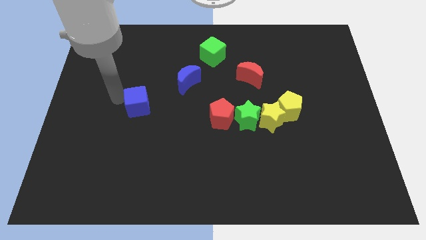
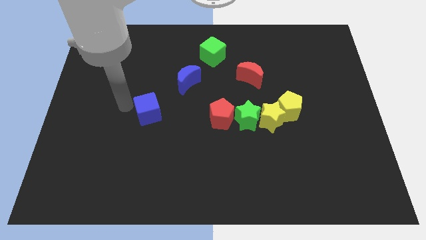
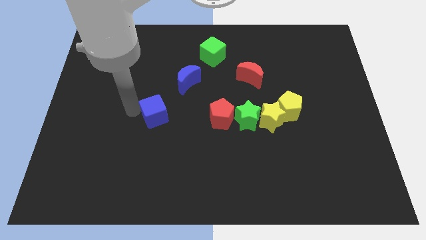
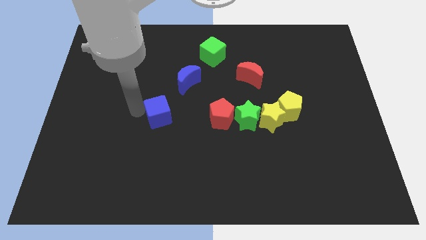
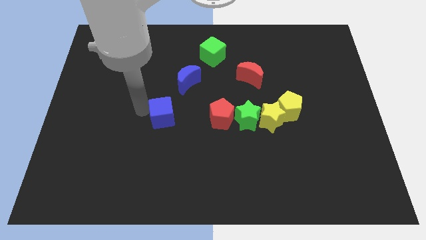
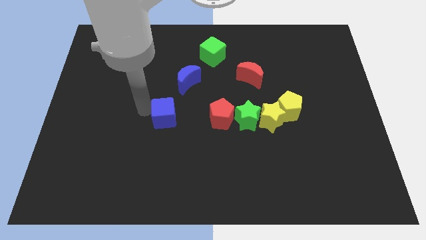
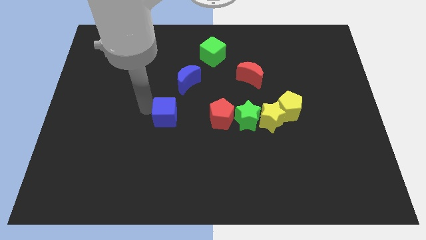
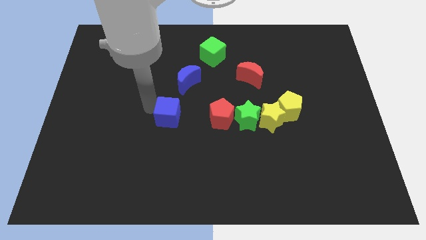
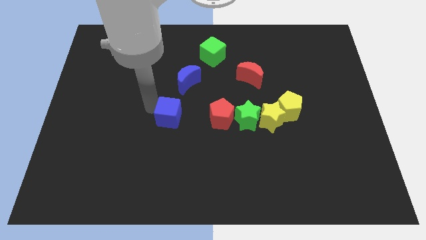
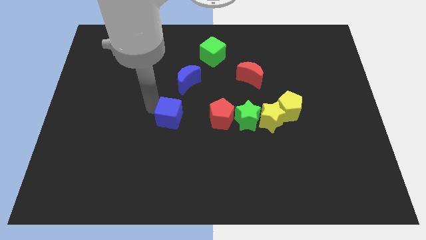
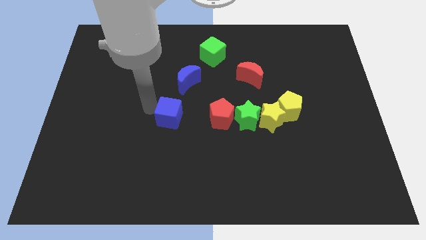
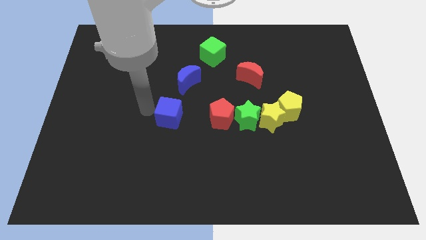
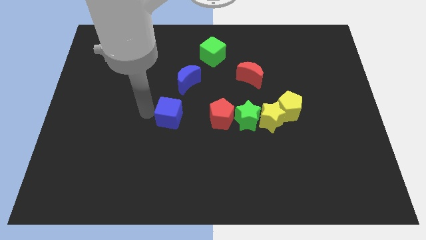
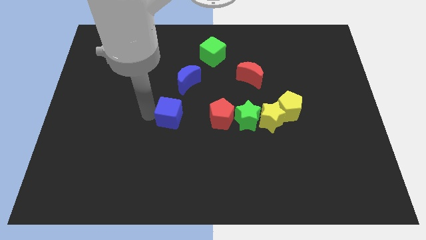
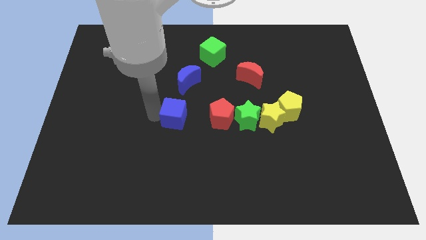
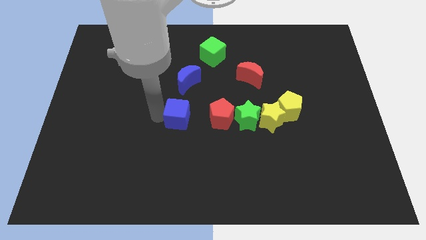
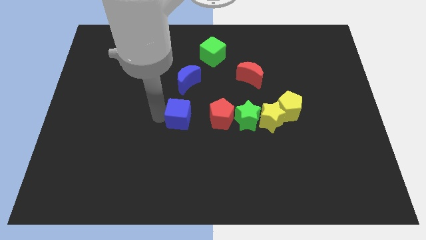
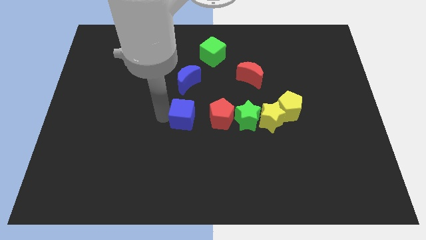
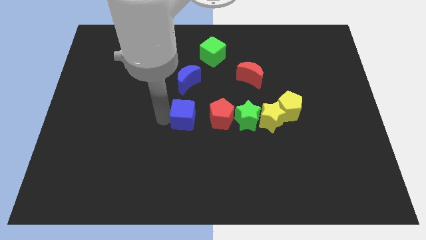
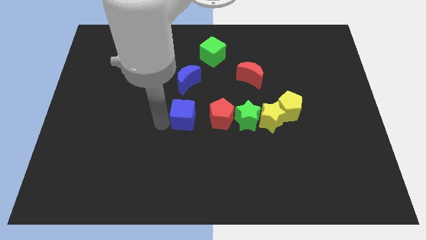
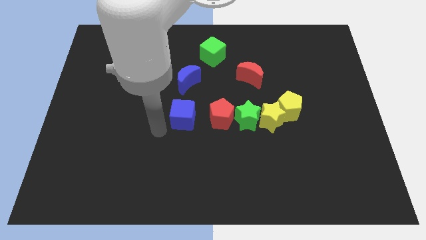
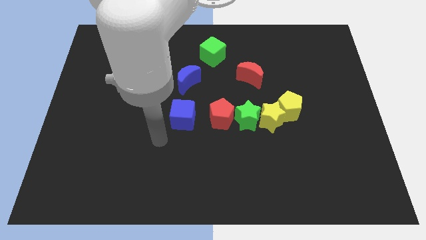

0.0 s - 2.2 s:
put the blue cube below the blue crescent

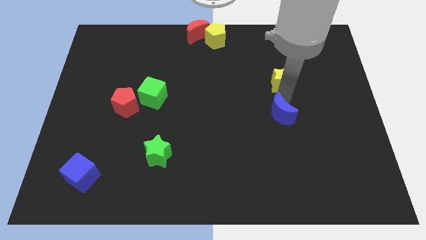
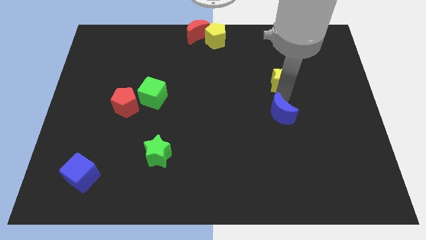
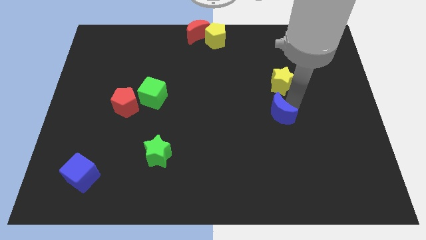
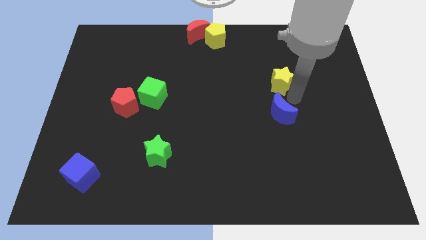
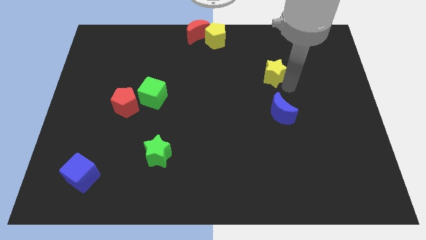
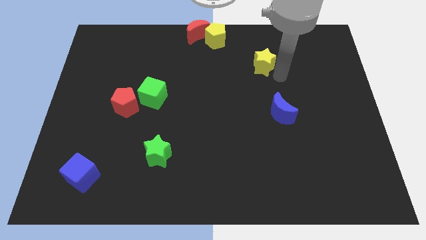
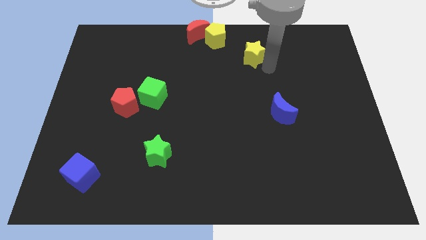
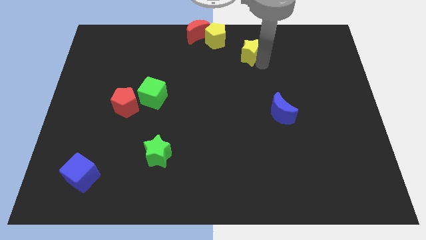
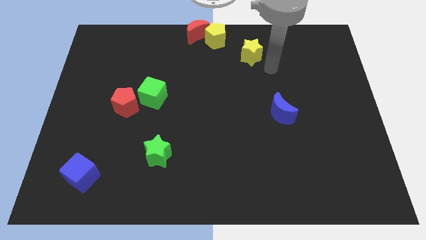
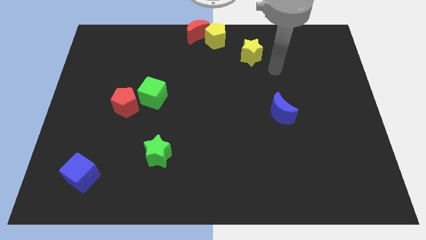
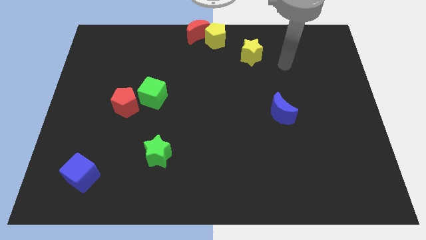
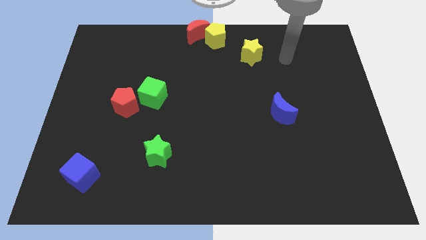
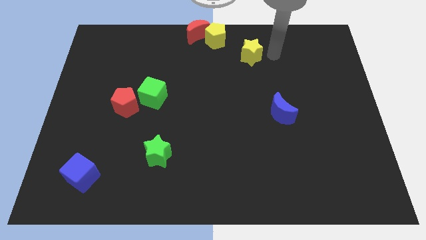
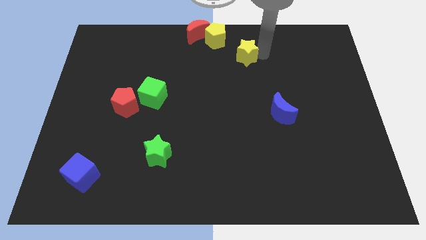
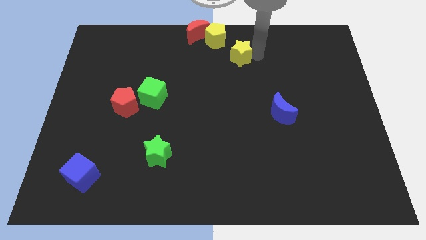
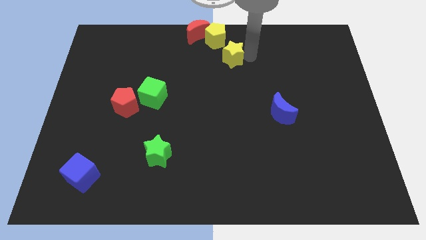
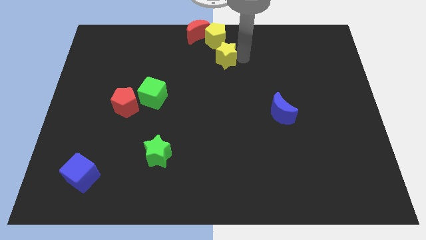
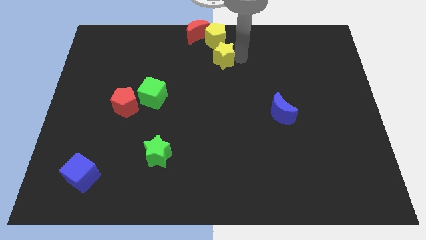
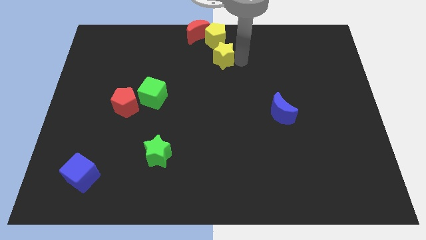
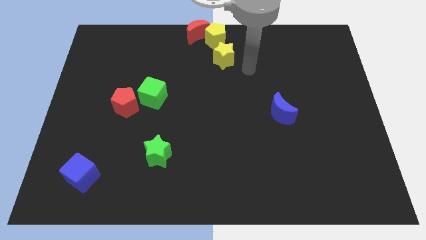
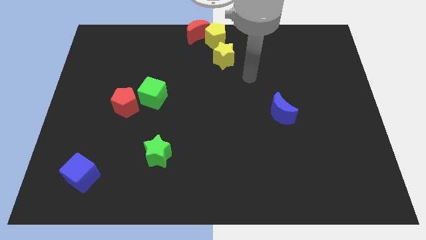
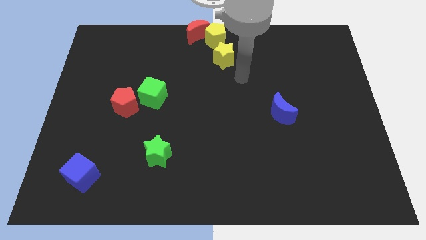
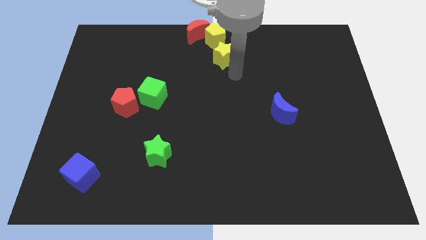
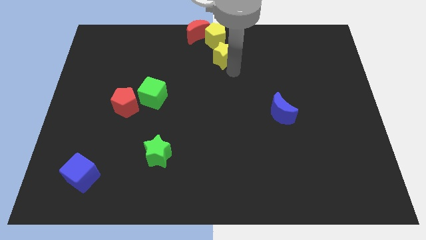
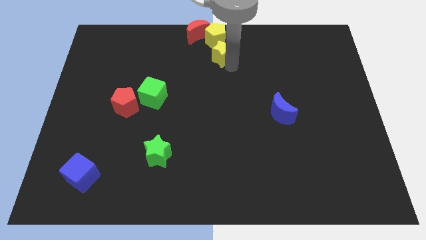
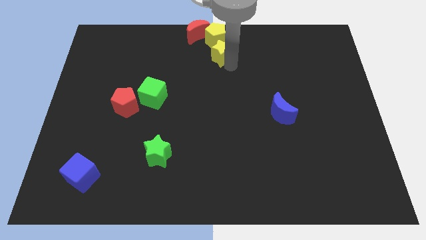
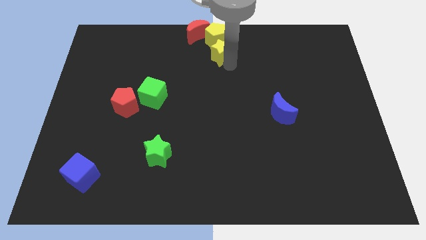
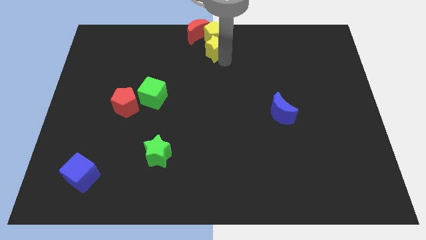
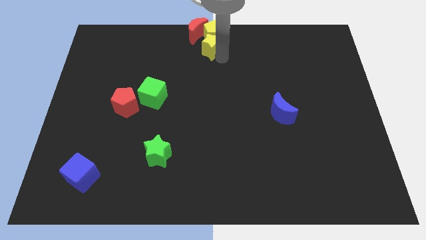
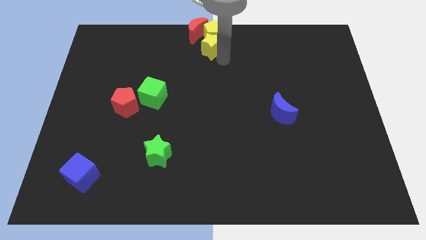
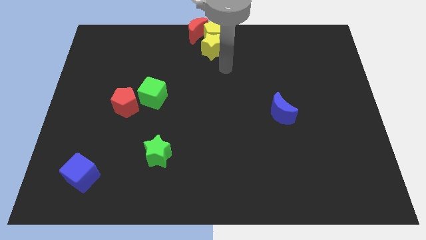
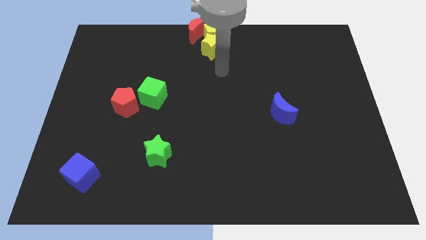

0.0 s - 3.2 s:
place the yellow star down to the yellow pentagon

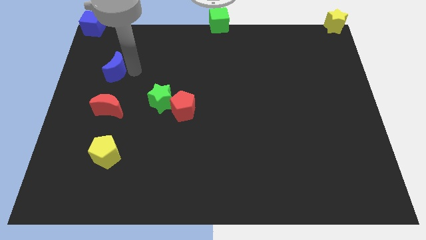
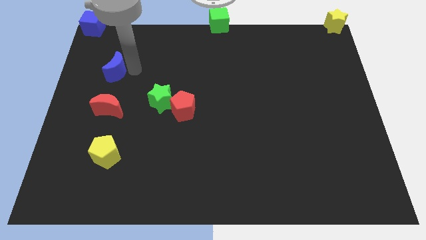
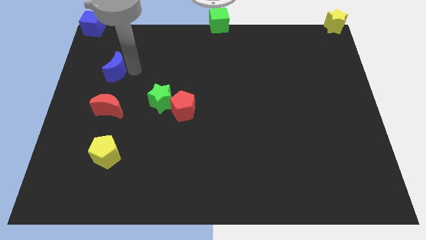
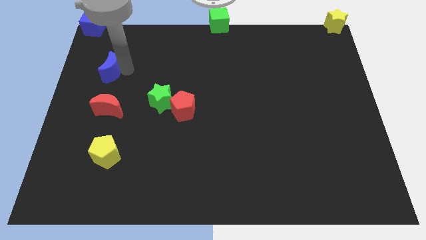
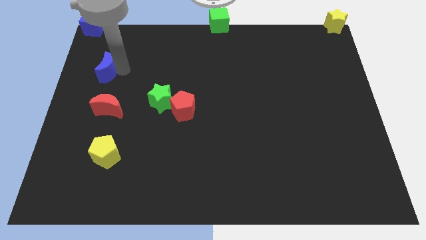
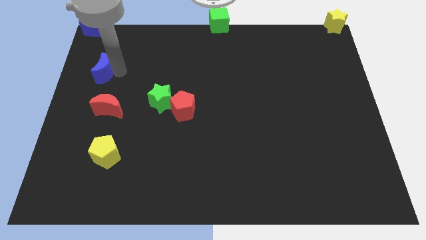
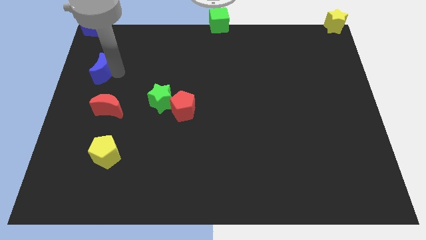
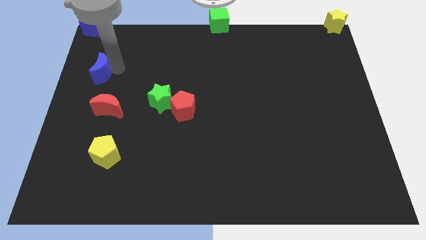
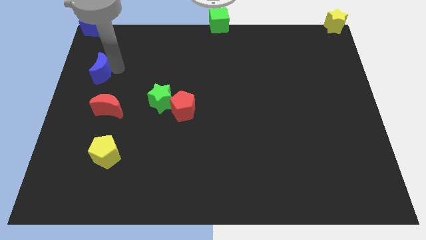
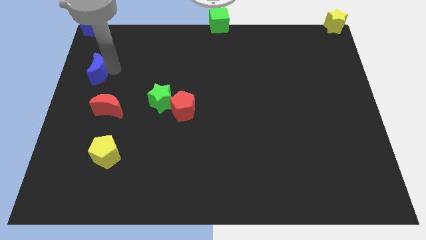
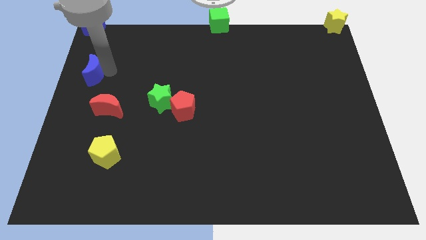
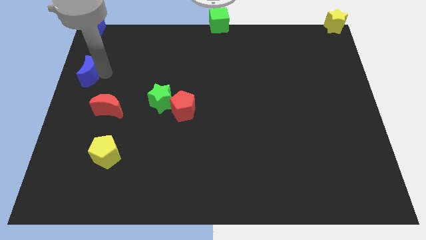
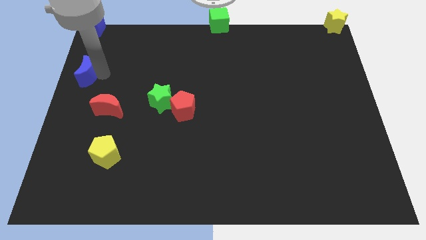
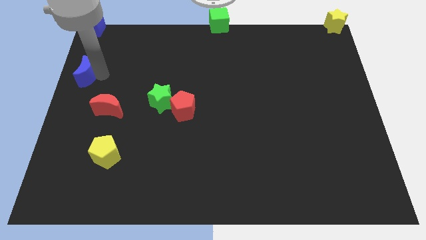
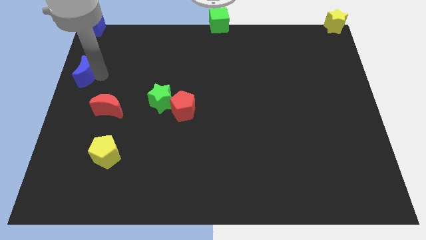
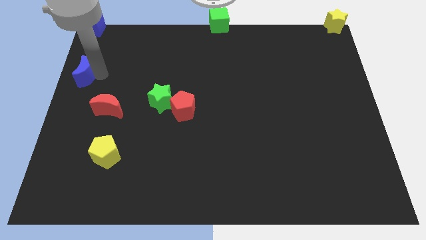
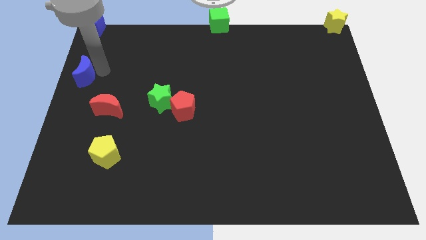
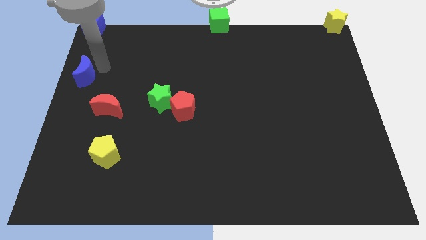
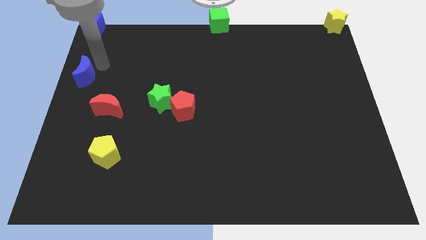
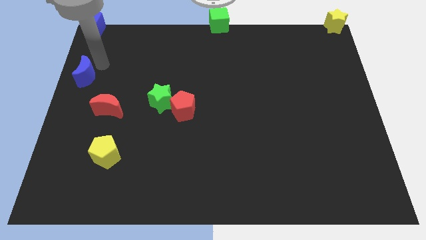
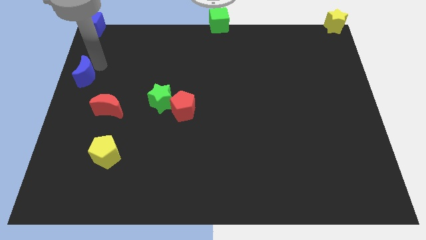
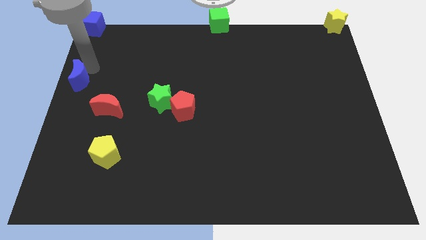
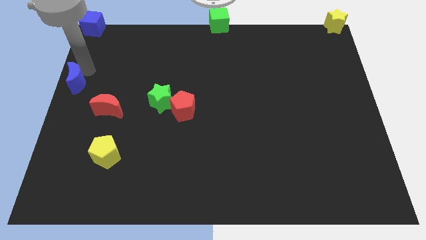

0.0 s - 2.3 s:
slide the blue moon to the left of the board

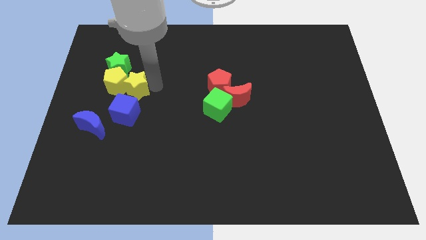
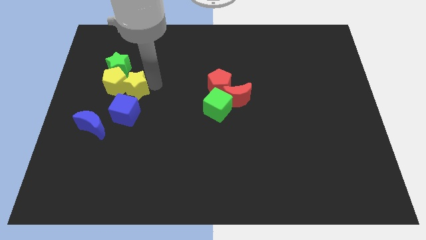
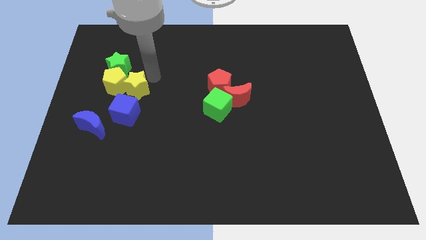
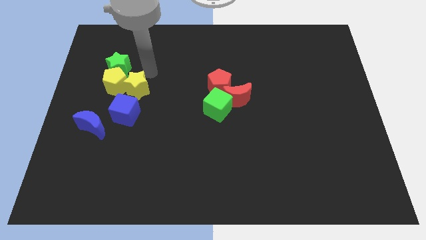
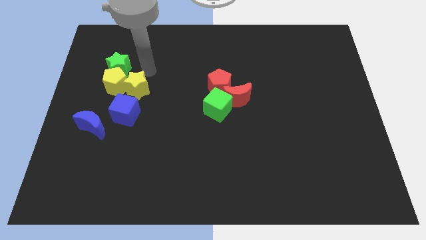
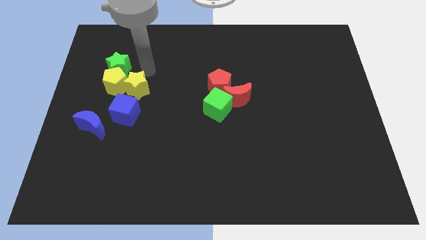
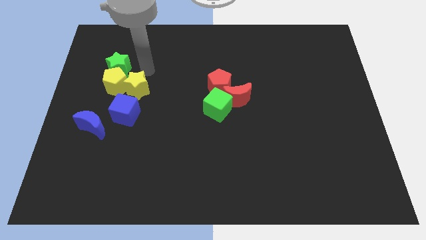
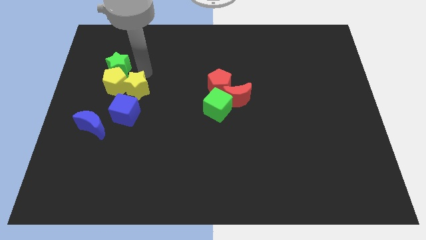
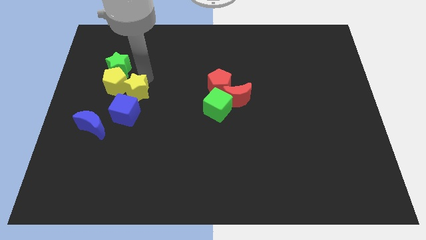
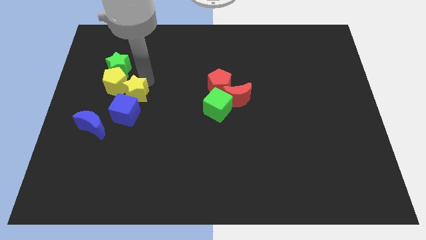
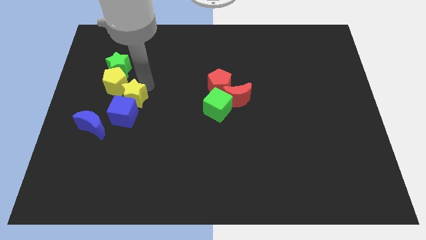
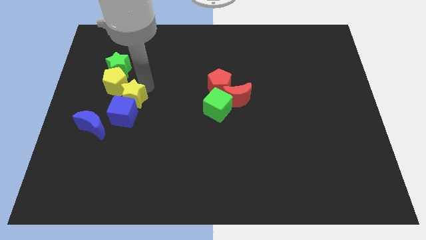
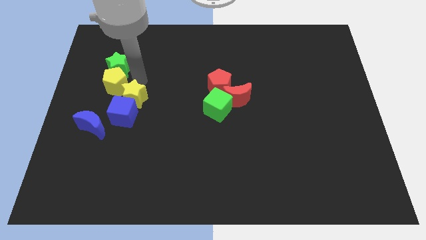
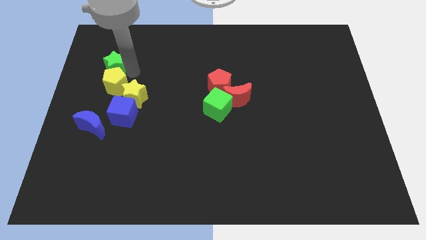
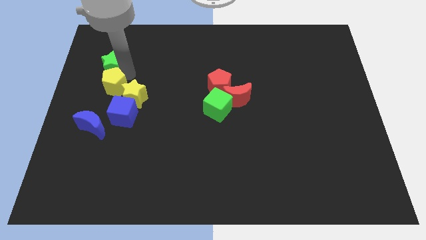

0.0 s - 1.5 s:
push the yellow star into the blue cube
